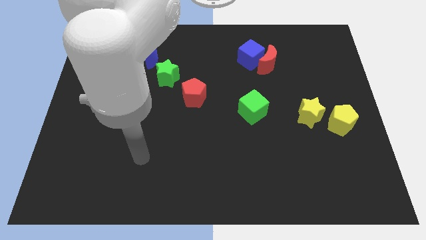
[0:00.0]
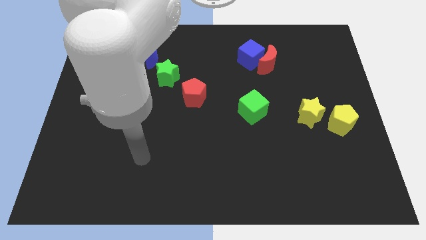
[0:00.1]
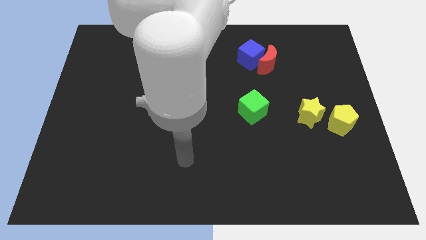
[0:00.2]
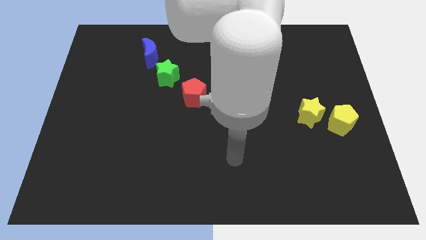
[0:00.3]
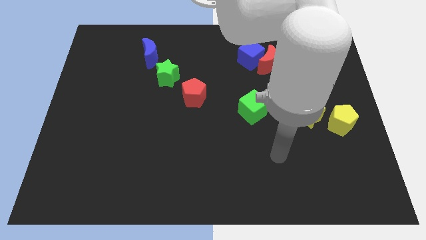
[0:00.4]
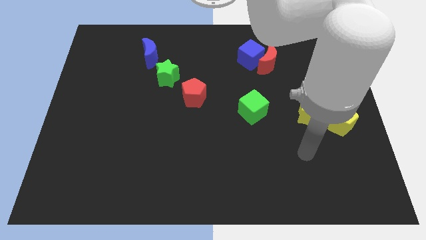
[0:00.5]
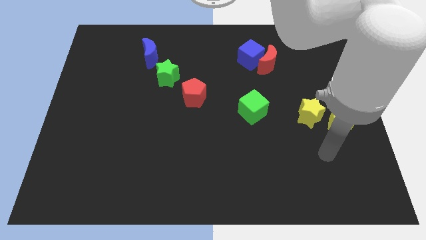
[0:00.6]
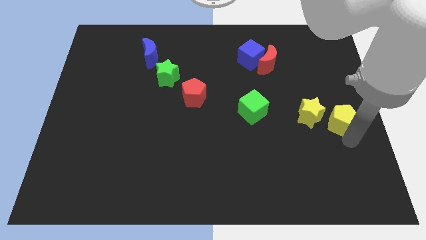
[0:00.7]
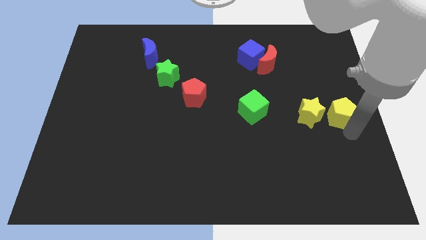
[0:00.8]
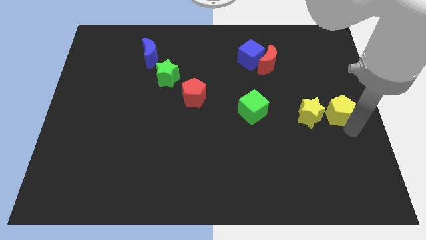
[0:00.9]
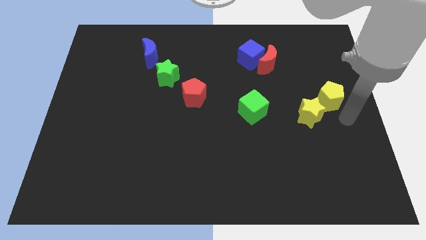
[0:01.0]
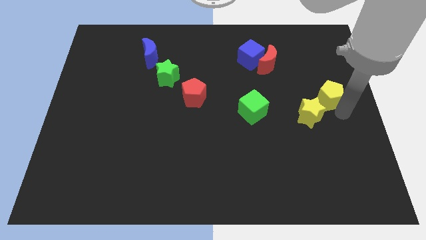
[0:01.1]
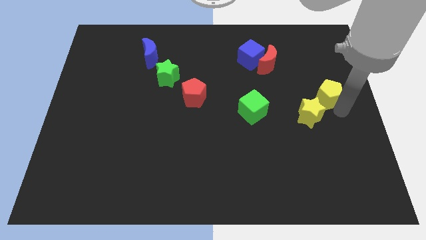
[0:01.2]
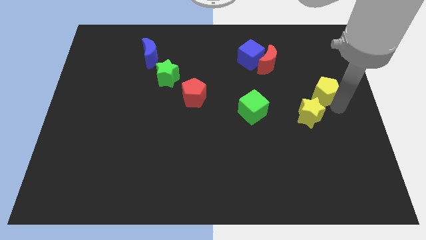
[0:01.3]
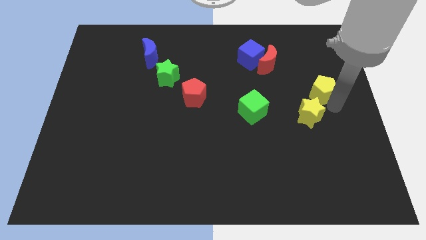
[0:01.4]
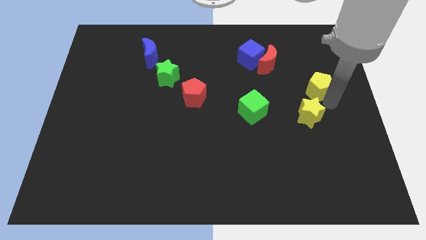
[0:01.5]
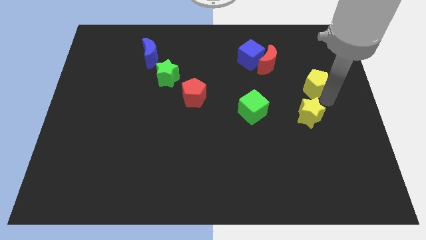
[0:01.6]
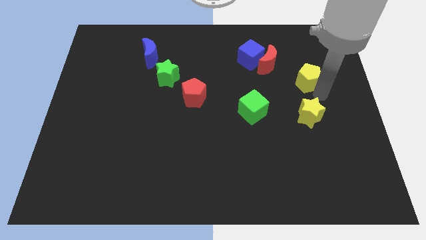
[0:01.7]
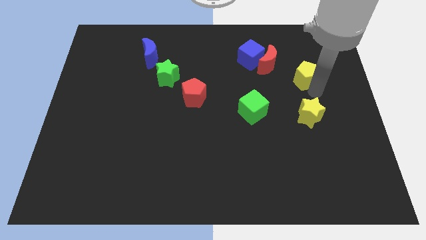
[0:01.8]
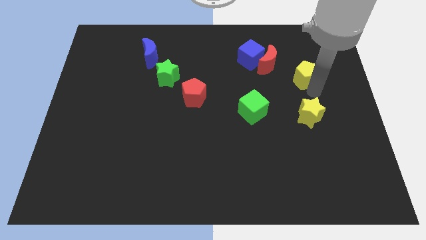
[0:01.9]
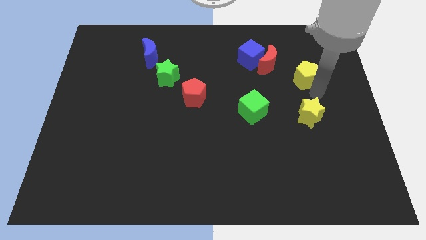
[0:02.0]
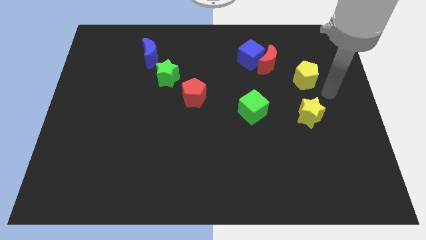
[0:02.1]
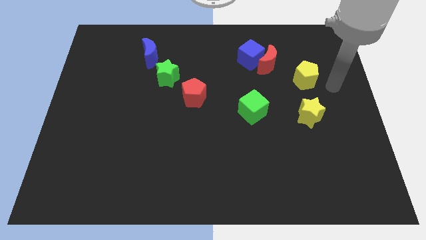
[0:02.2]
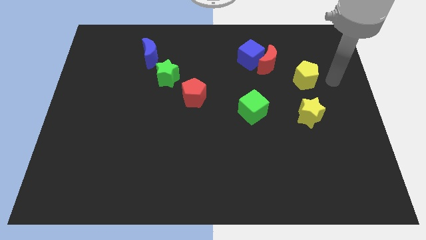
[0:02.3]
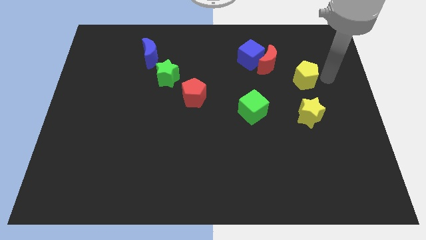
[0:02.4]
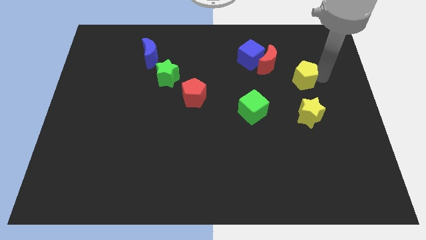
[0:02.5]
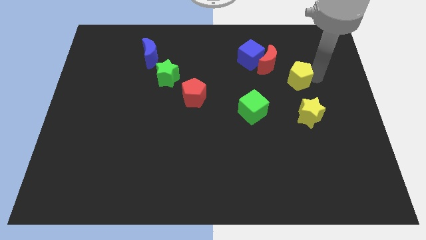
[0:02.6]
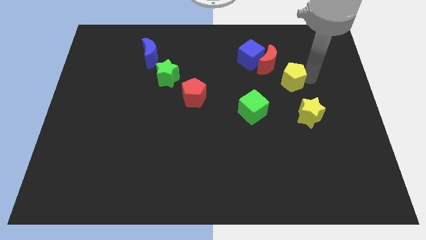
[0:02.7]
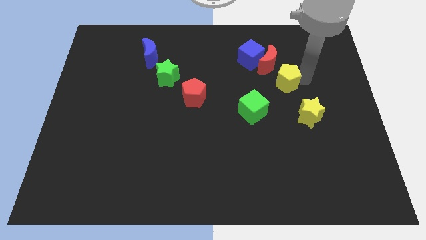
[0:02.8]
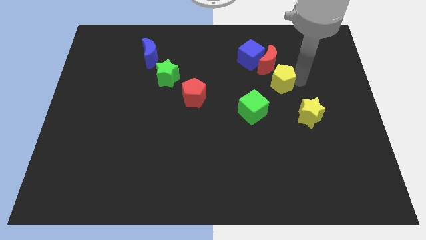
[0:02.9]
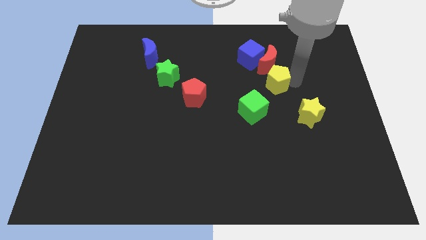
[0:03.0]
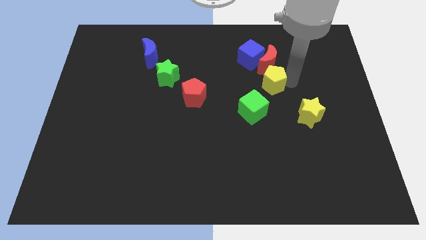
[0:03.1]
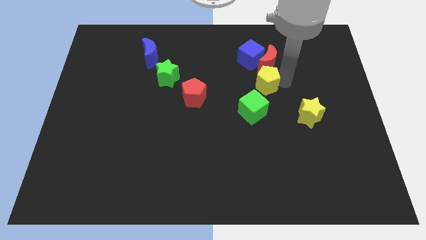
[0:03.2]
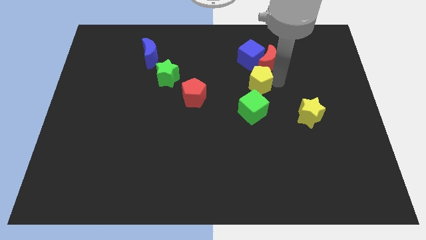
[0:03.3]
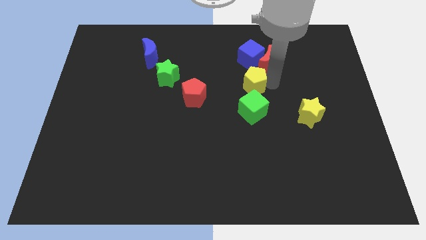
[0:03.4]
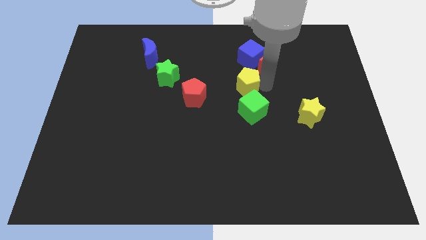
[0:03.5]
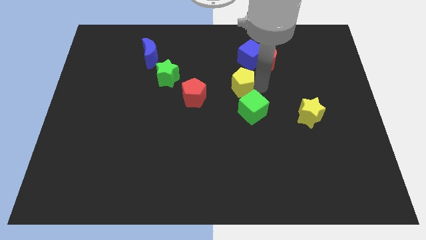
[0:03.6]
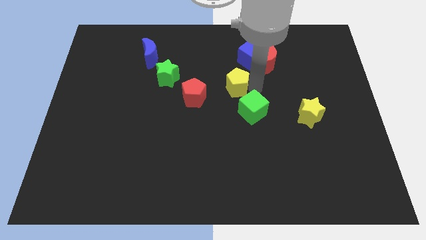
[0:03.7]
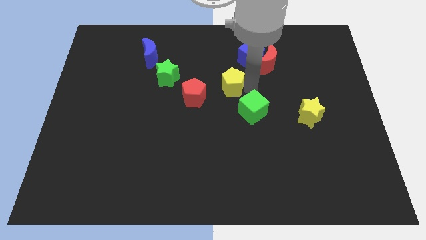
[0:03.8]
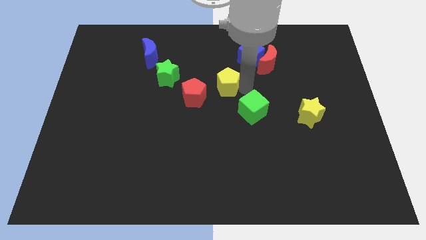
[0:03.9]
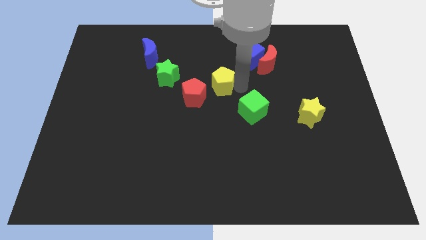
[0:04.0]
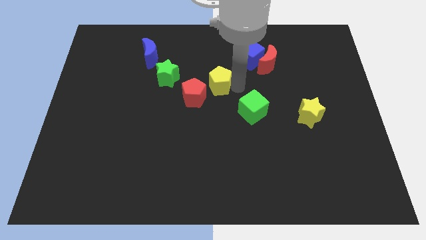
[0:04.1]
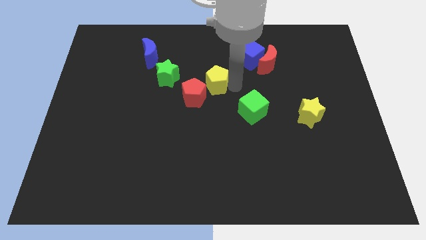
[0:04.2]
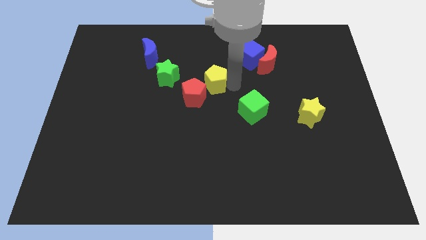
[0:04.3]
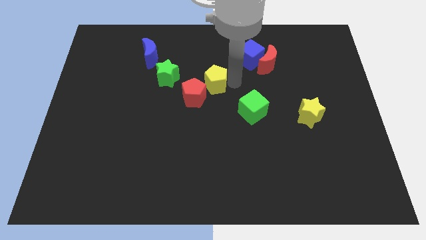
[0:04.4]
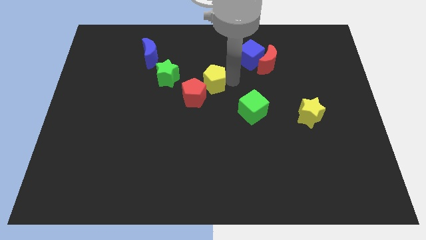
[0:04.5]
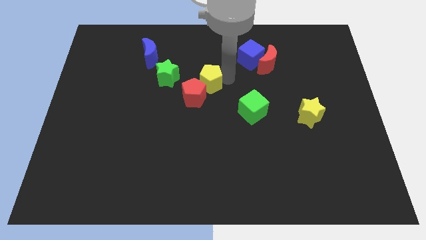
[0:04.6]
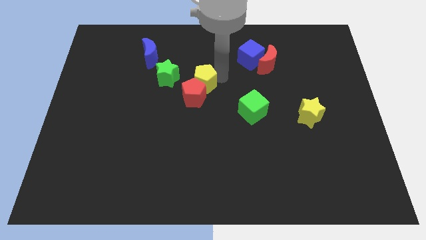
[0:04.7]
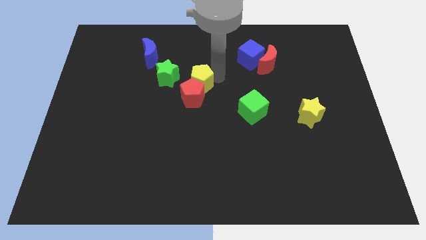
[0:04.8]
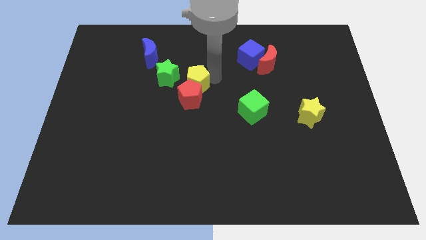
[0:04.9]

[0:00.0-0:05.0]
move the yellow pentagon to the red pentagon

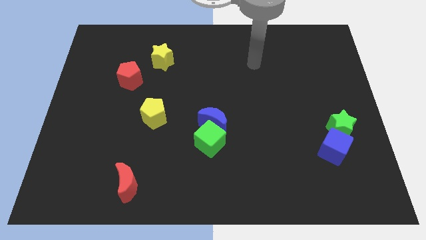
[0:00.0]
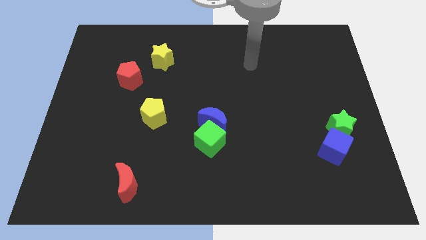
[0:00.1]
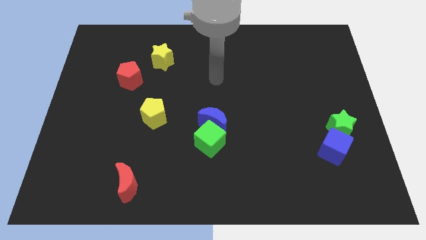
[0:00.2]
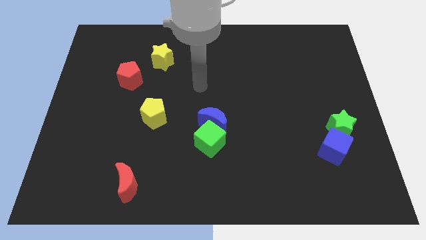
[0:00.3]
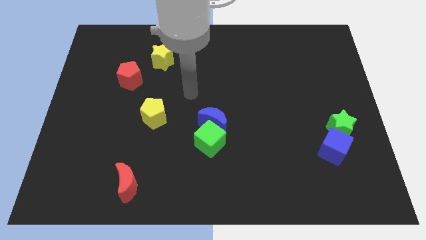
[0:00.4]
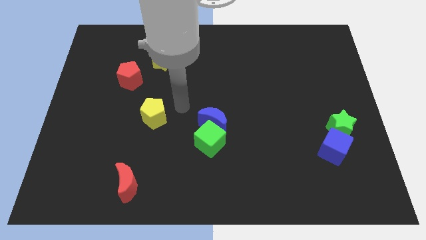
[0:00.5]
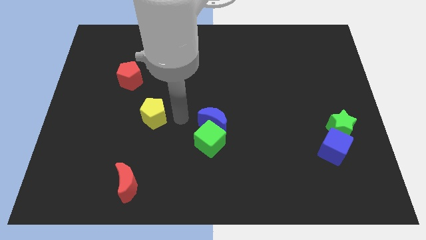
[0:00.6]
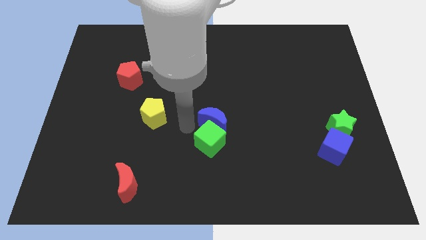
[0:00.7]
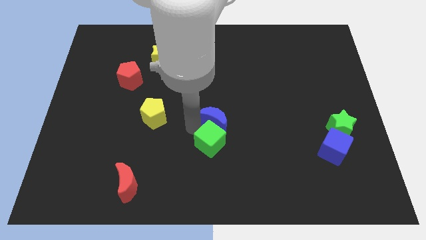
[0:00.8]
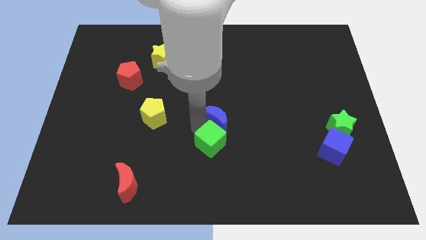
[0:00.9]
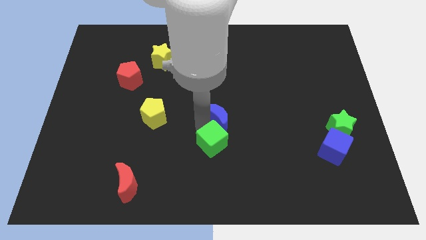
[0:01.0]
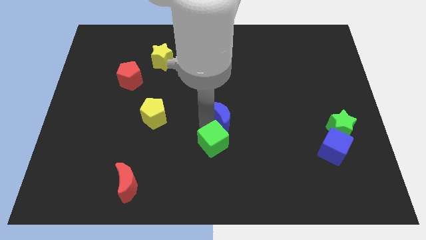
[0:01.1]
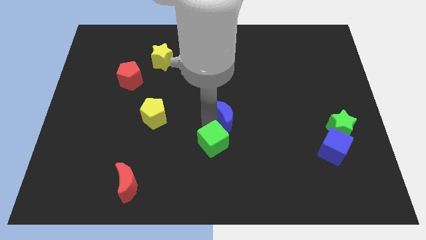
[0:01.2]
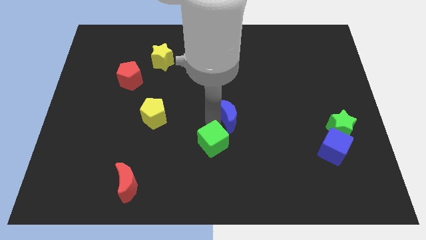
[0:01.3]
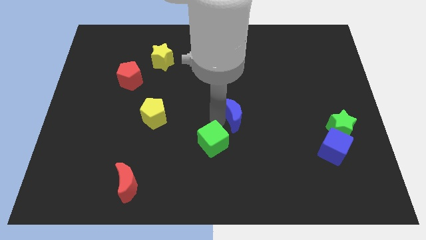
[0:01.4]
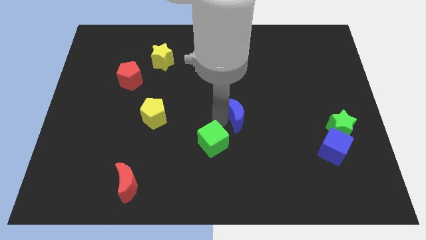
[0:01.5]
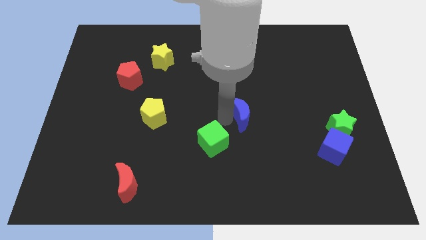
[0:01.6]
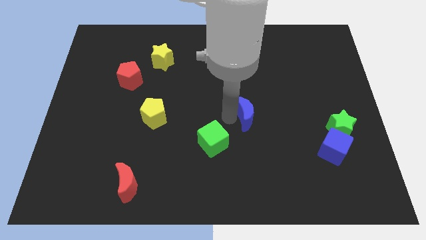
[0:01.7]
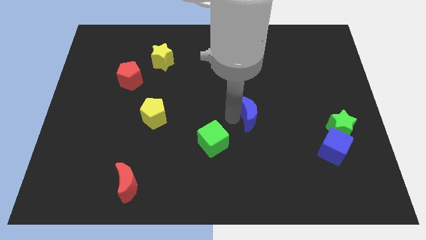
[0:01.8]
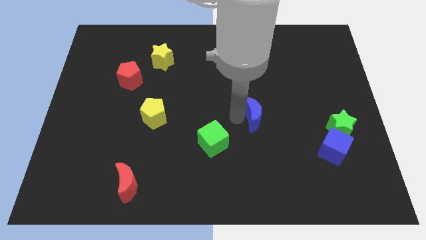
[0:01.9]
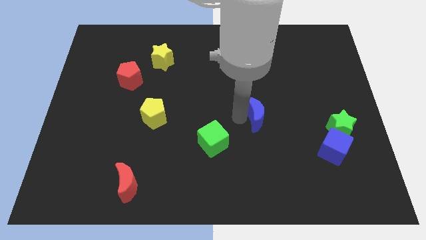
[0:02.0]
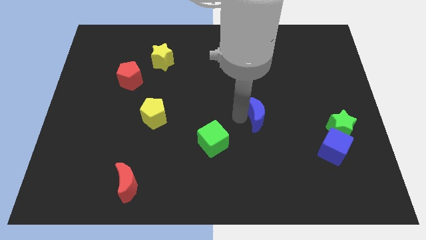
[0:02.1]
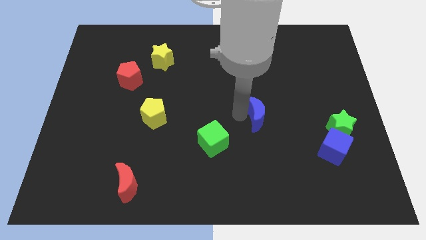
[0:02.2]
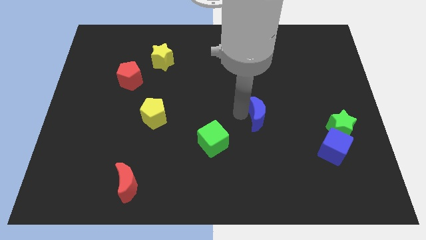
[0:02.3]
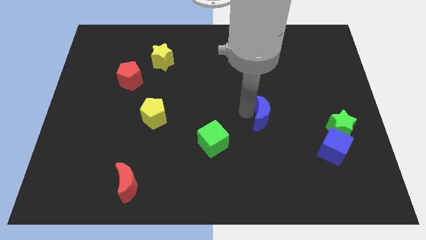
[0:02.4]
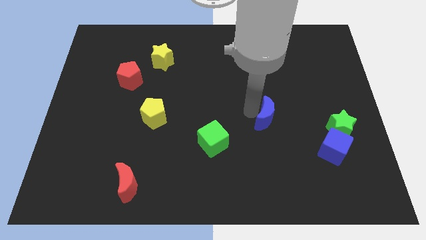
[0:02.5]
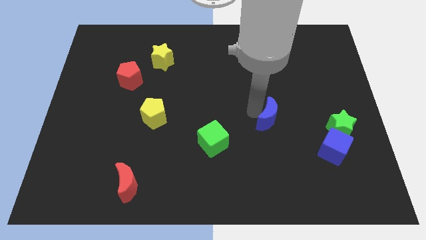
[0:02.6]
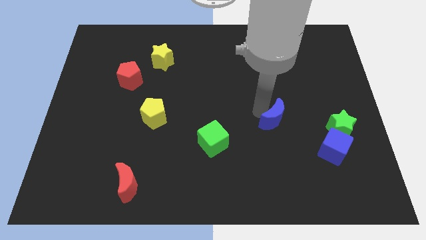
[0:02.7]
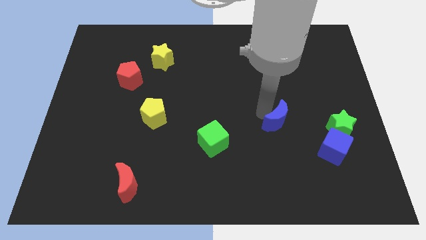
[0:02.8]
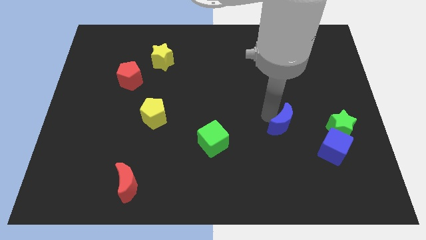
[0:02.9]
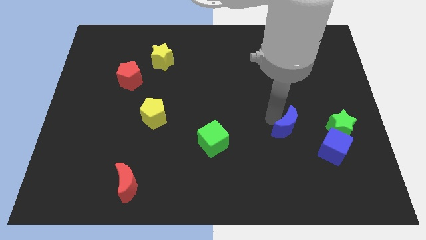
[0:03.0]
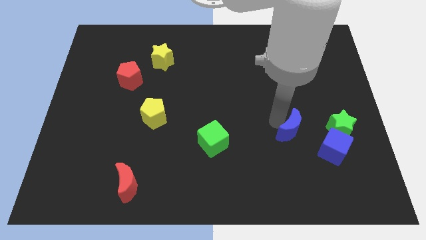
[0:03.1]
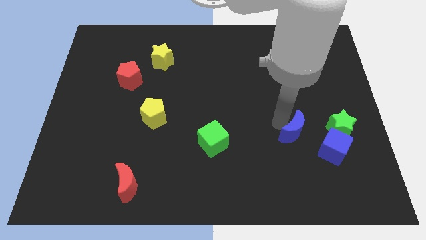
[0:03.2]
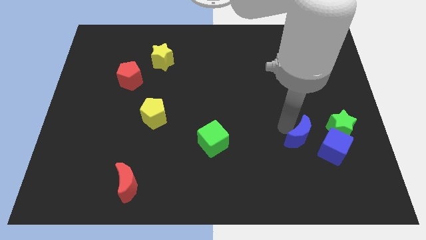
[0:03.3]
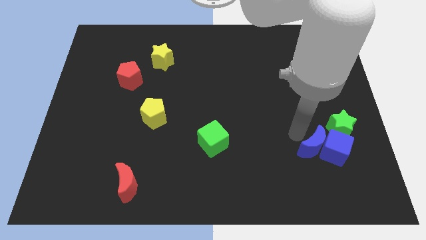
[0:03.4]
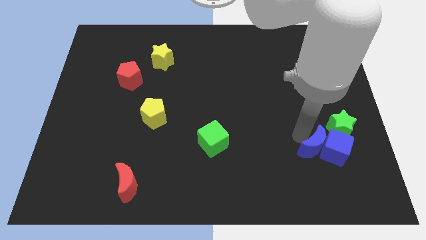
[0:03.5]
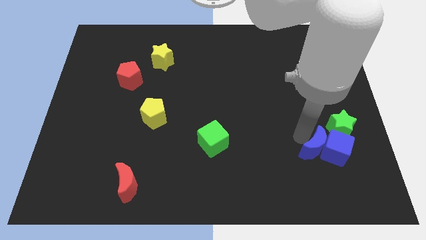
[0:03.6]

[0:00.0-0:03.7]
push the blue moon towards the blue cube
